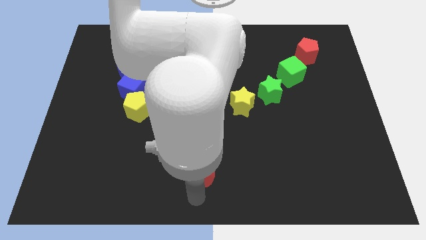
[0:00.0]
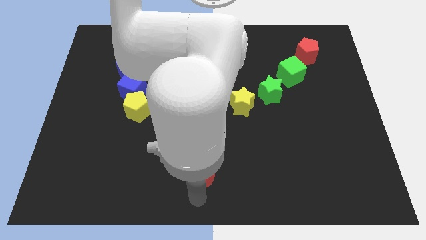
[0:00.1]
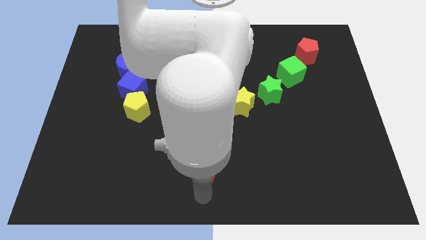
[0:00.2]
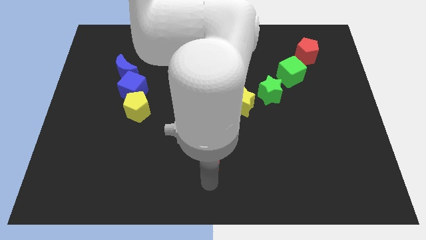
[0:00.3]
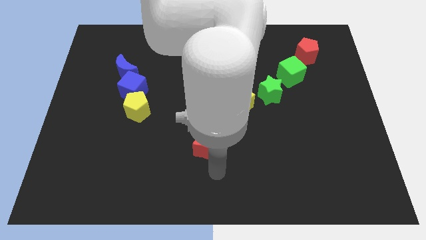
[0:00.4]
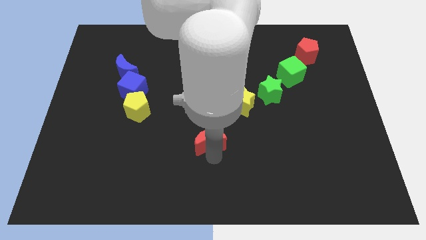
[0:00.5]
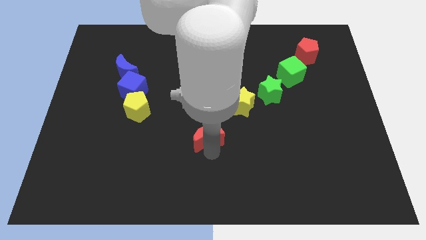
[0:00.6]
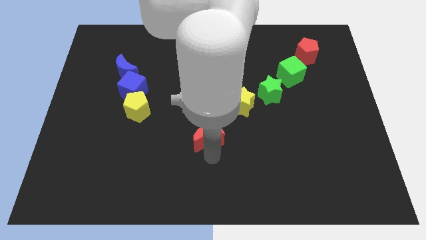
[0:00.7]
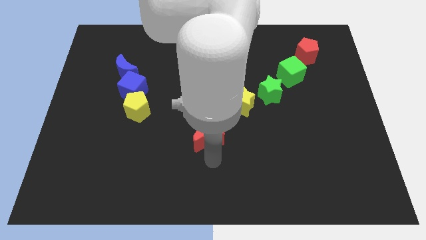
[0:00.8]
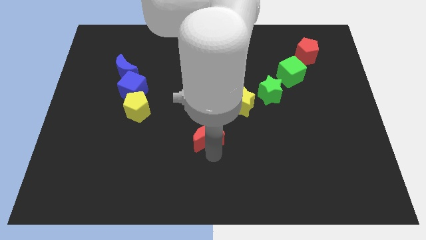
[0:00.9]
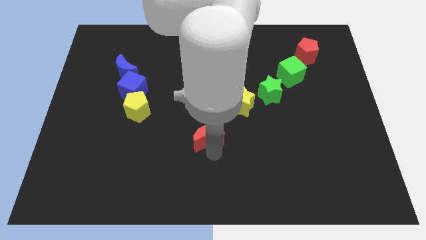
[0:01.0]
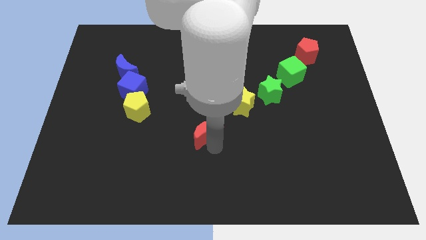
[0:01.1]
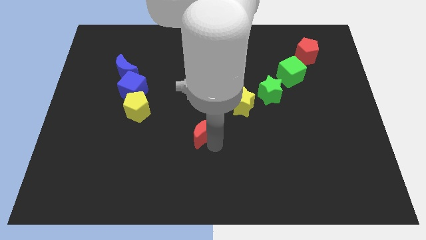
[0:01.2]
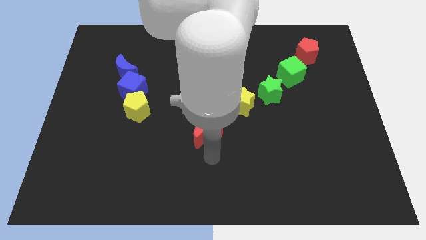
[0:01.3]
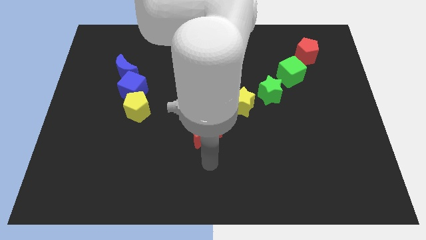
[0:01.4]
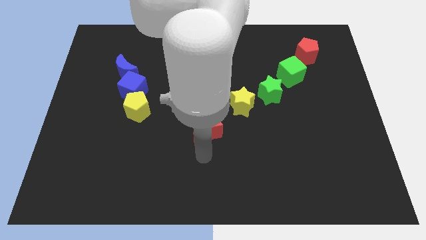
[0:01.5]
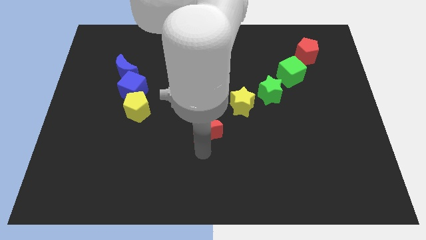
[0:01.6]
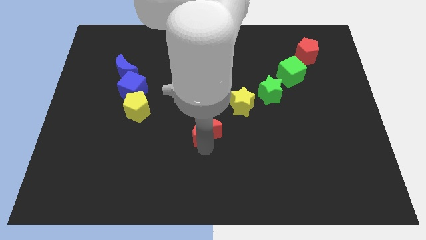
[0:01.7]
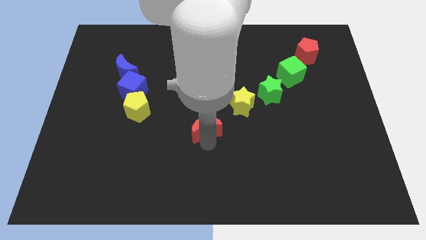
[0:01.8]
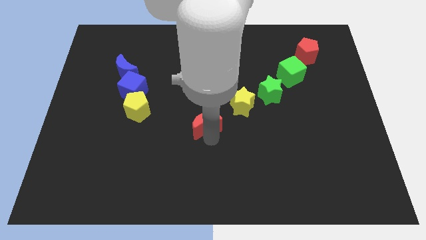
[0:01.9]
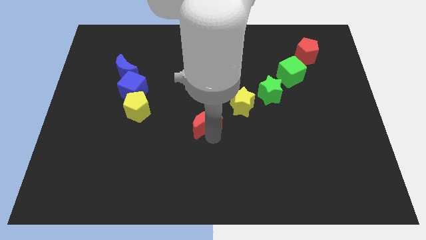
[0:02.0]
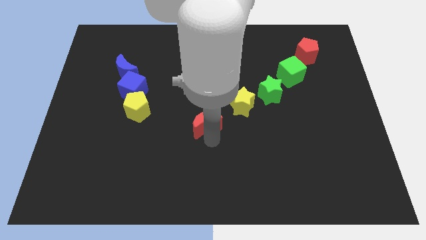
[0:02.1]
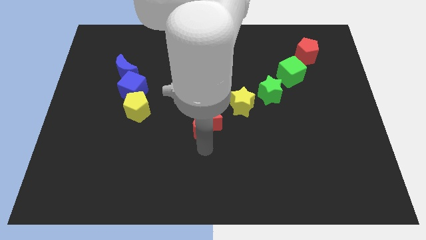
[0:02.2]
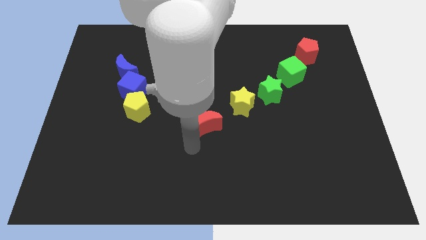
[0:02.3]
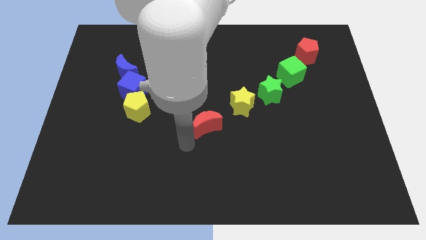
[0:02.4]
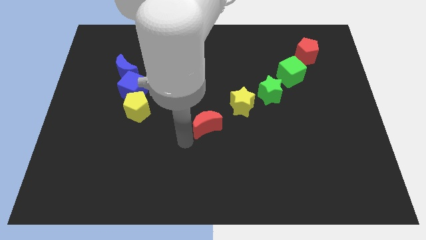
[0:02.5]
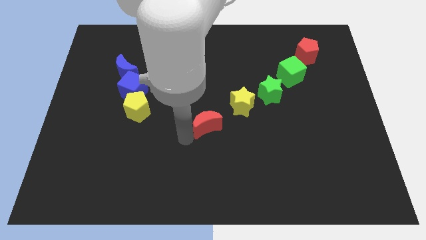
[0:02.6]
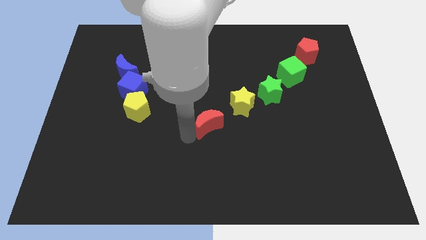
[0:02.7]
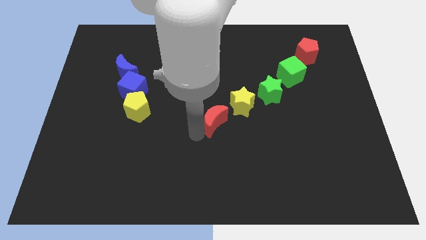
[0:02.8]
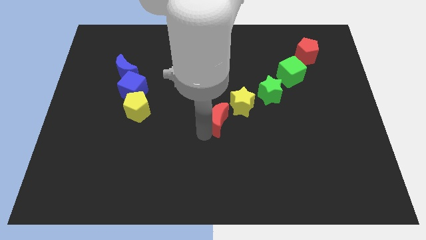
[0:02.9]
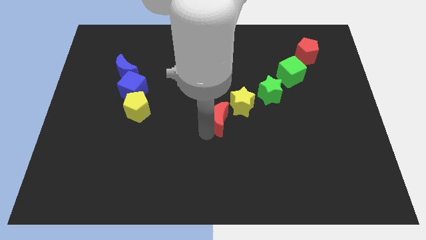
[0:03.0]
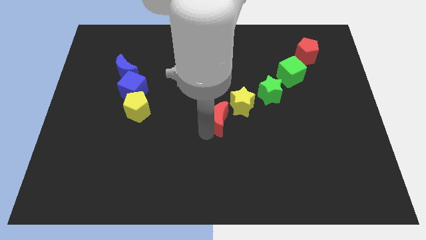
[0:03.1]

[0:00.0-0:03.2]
move red moon towards yellow star

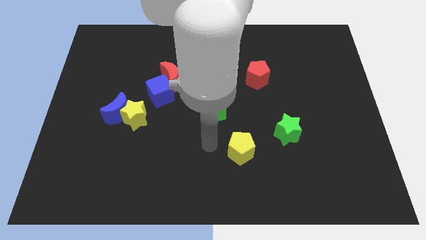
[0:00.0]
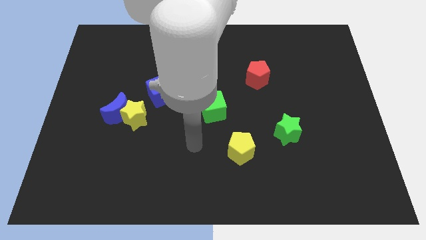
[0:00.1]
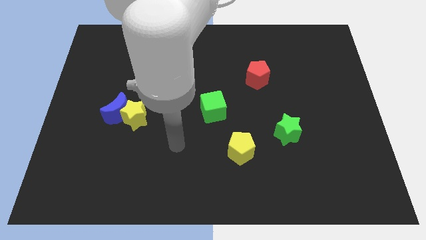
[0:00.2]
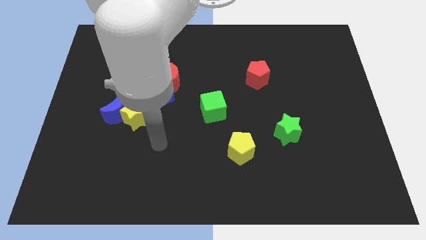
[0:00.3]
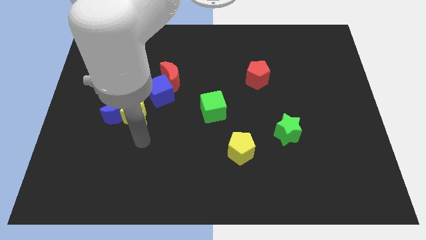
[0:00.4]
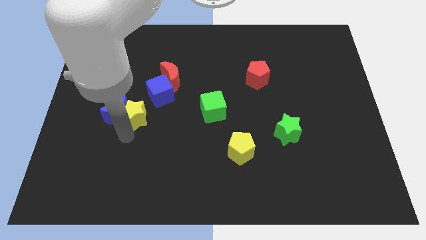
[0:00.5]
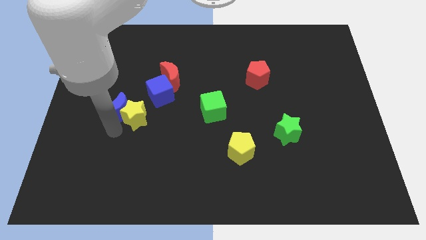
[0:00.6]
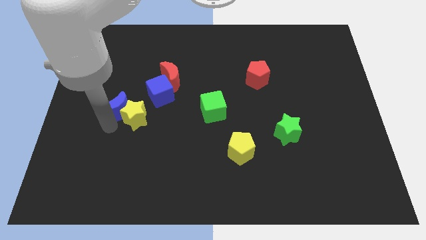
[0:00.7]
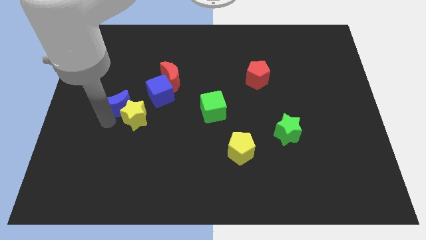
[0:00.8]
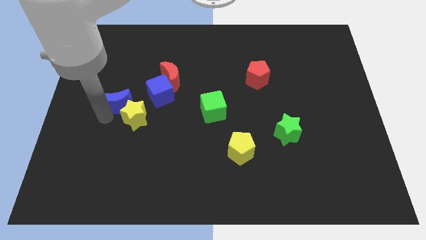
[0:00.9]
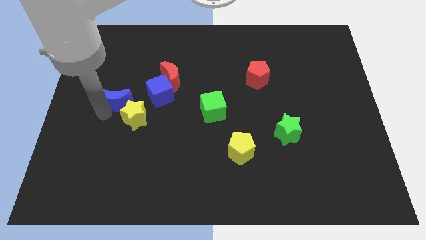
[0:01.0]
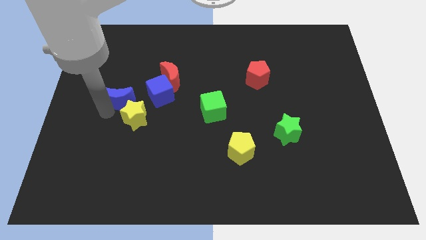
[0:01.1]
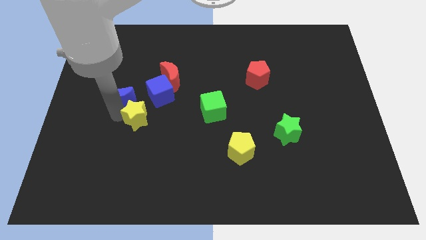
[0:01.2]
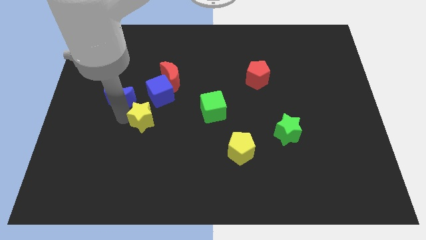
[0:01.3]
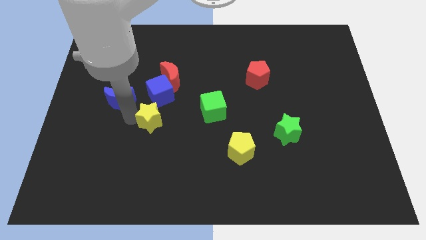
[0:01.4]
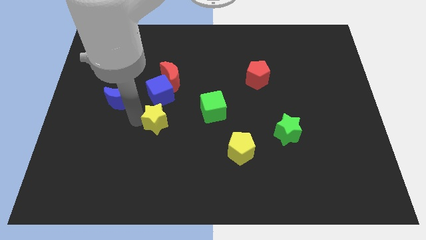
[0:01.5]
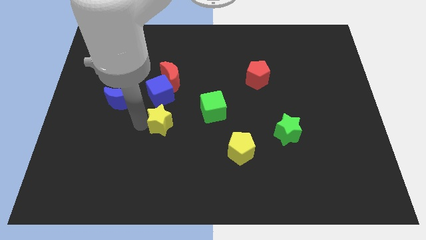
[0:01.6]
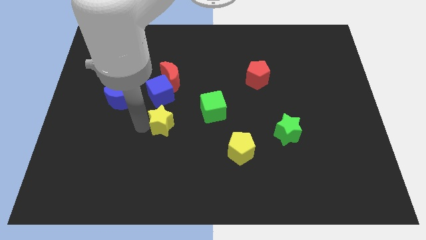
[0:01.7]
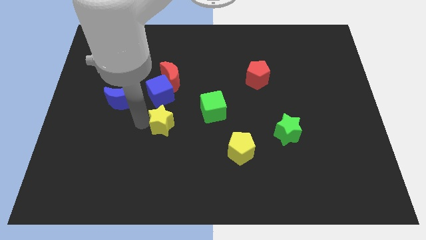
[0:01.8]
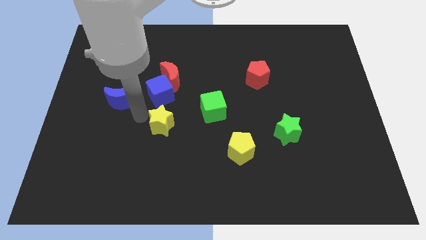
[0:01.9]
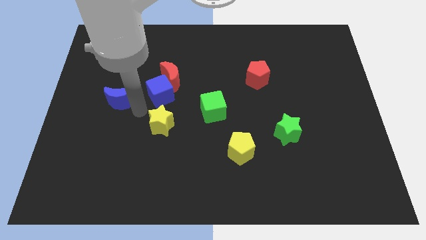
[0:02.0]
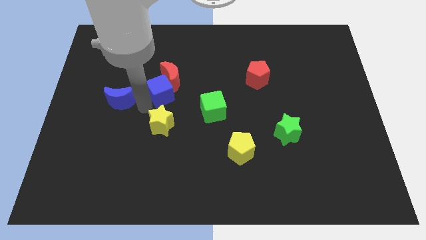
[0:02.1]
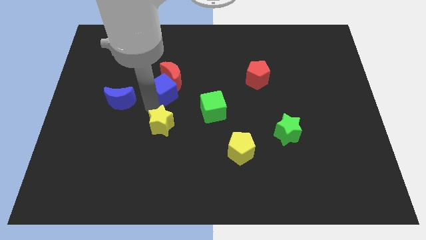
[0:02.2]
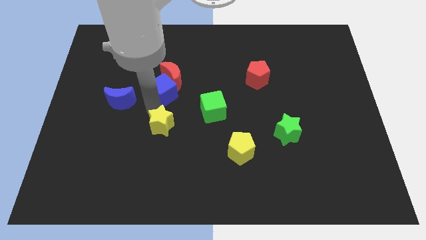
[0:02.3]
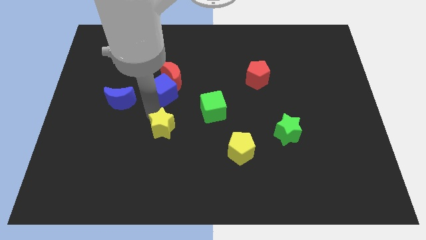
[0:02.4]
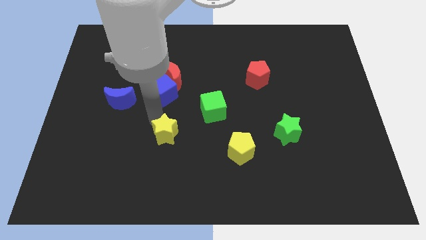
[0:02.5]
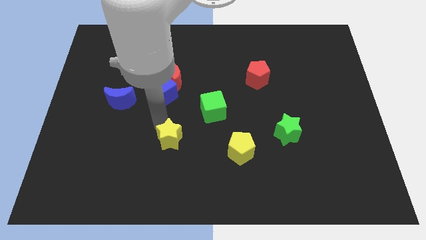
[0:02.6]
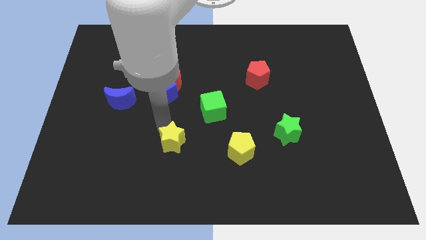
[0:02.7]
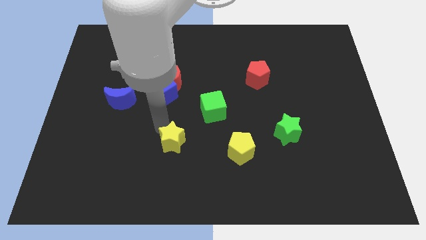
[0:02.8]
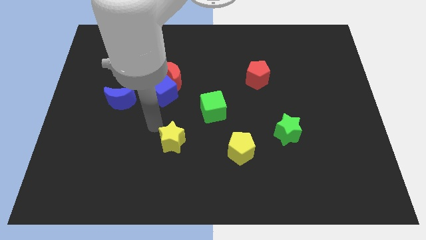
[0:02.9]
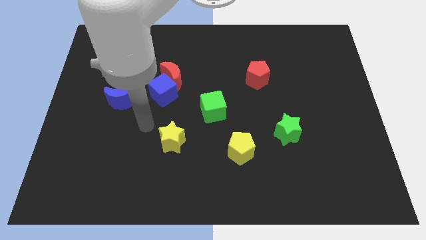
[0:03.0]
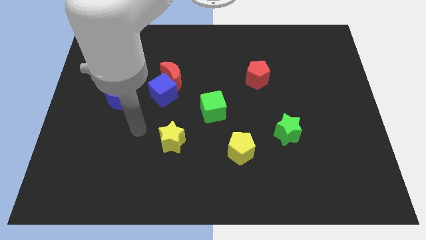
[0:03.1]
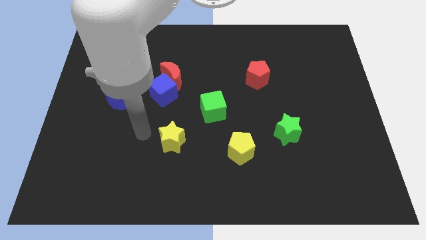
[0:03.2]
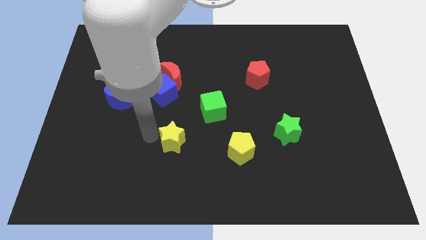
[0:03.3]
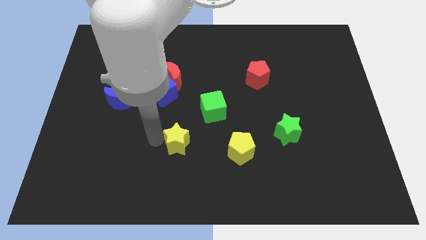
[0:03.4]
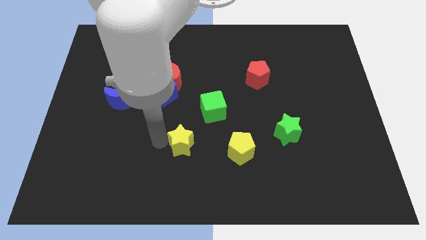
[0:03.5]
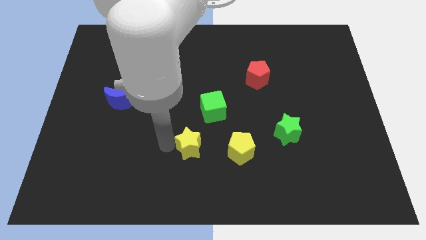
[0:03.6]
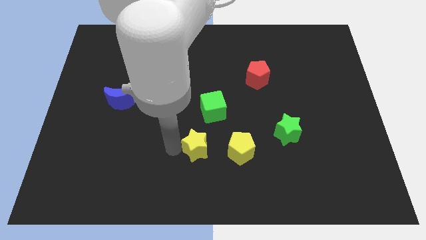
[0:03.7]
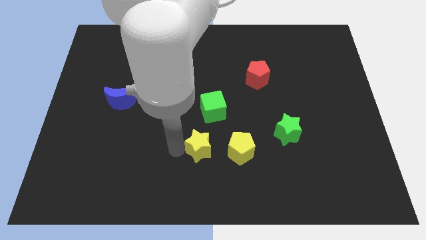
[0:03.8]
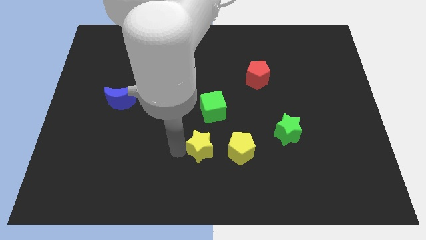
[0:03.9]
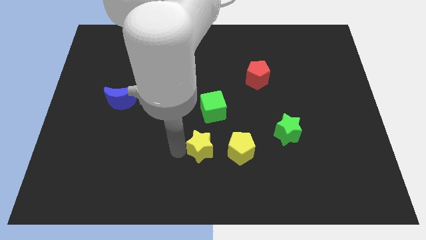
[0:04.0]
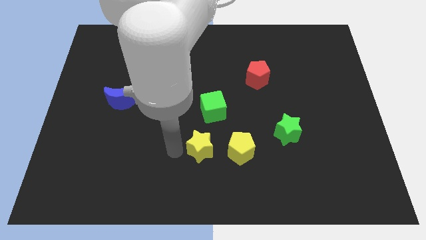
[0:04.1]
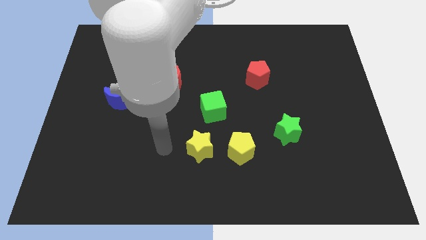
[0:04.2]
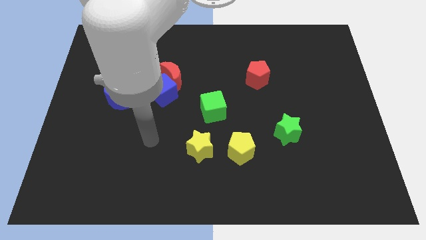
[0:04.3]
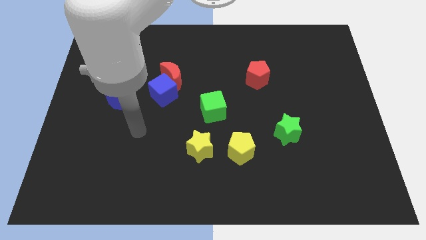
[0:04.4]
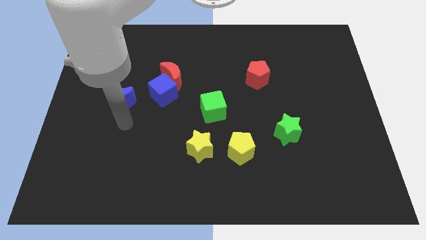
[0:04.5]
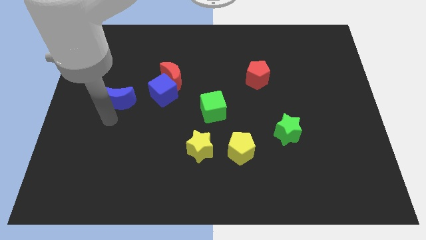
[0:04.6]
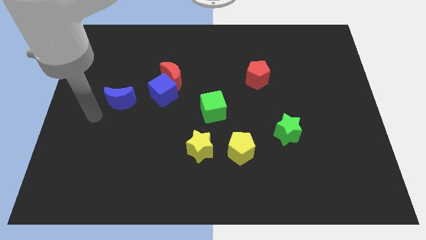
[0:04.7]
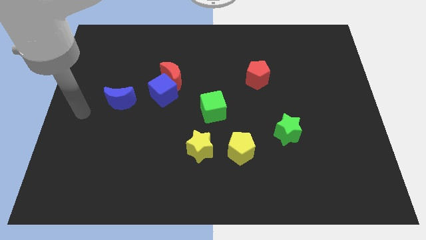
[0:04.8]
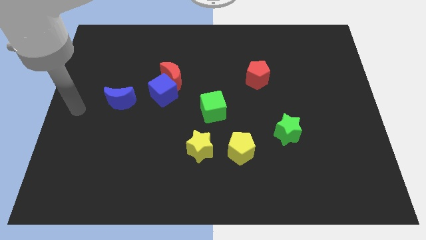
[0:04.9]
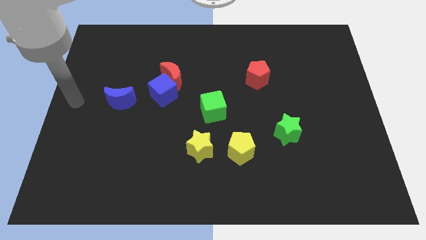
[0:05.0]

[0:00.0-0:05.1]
separate the blue moon and yellow star

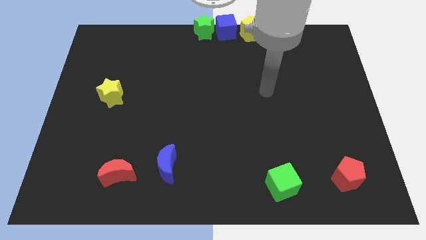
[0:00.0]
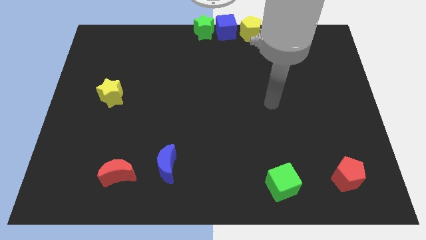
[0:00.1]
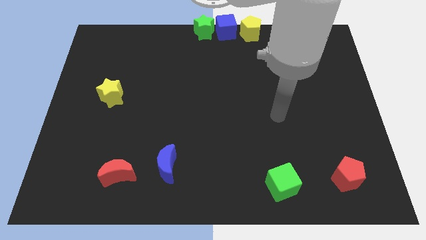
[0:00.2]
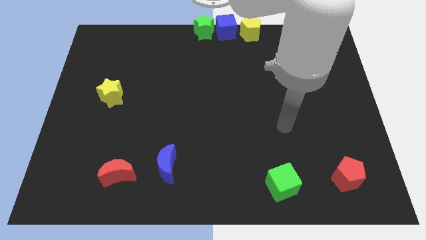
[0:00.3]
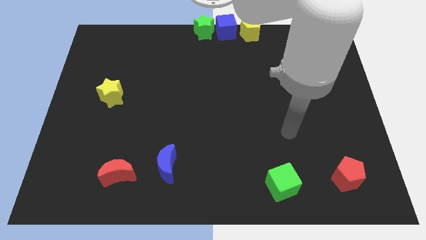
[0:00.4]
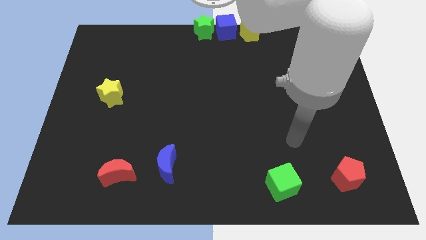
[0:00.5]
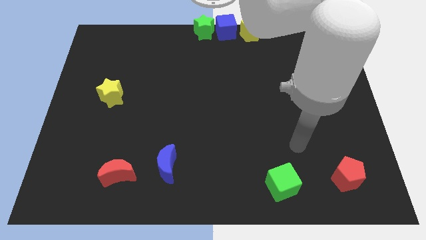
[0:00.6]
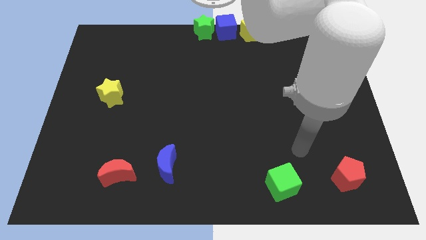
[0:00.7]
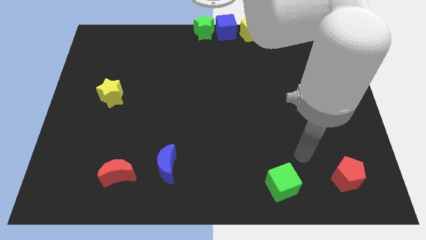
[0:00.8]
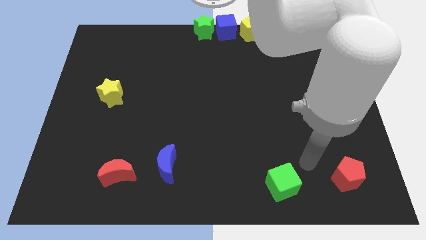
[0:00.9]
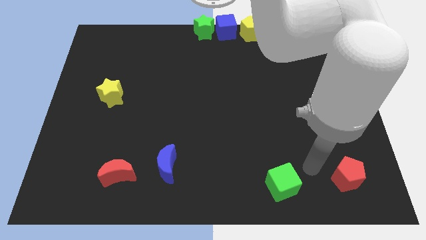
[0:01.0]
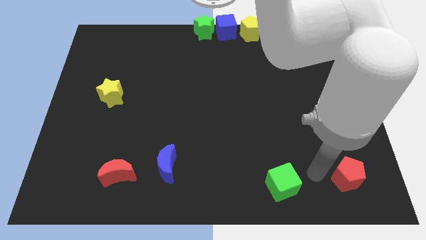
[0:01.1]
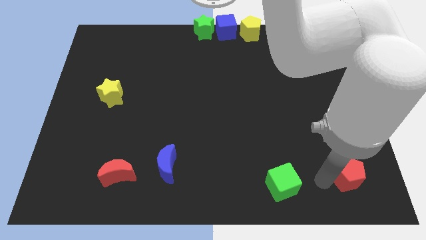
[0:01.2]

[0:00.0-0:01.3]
place your arm in between green cube and red pentagon
